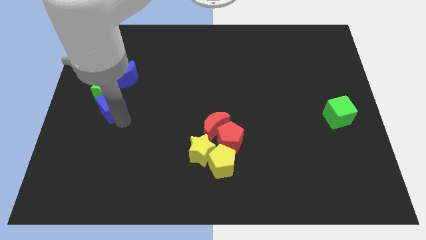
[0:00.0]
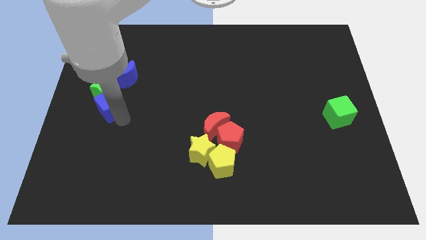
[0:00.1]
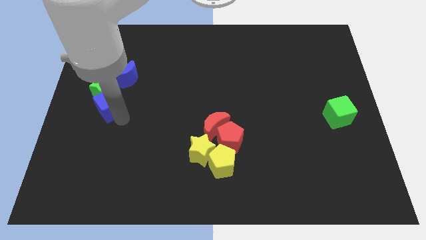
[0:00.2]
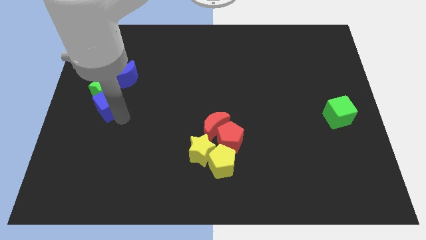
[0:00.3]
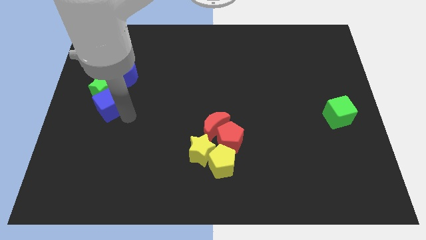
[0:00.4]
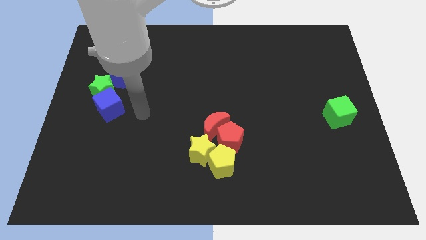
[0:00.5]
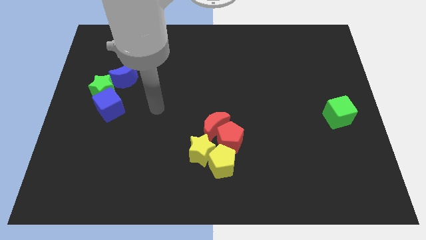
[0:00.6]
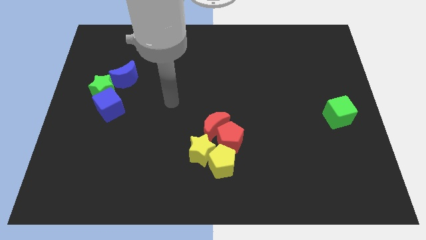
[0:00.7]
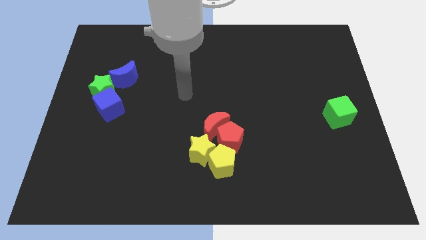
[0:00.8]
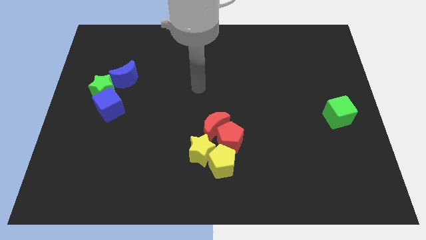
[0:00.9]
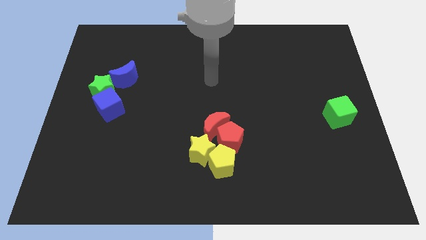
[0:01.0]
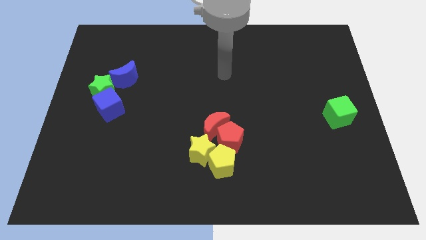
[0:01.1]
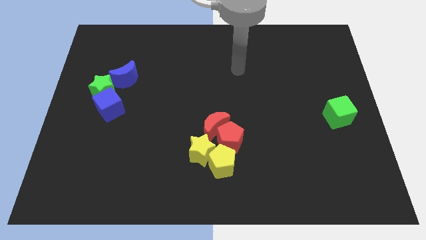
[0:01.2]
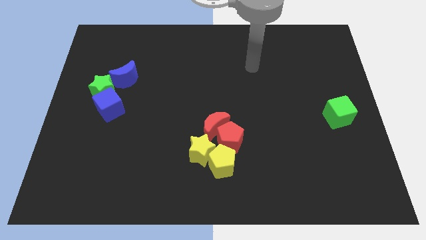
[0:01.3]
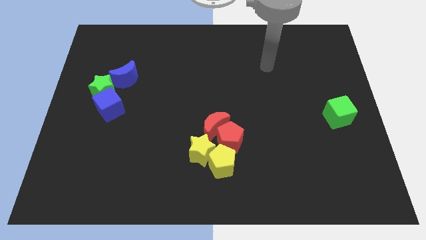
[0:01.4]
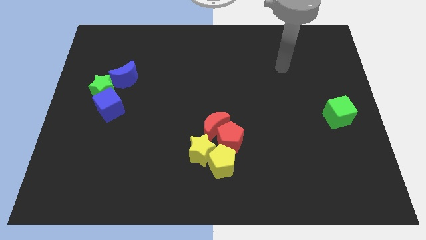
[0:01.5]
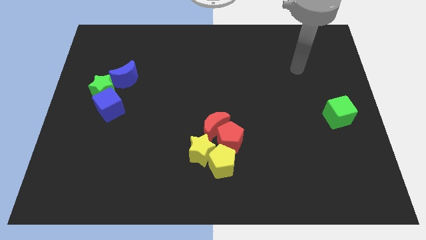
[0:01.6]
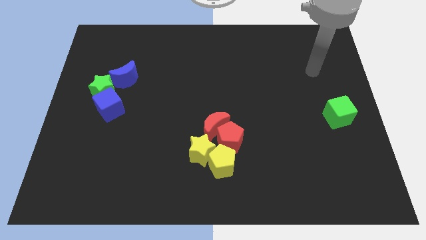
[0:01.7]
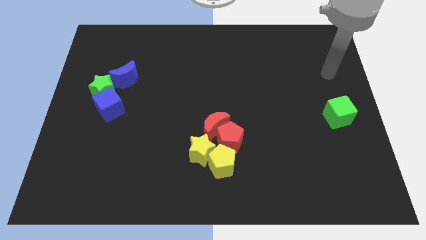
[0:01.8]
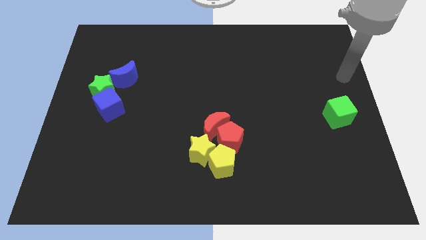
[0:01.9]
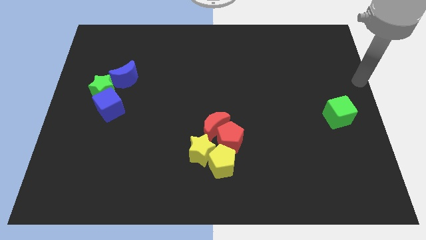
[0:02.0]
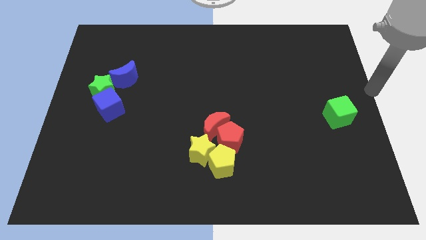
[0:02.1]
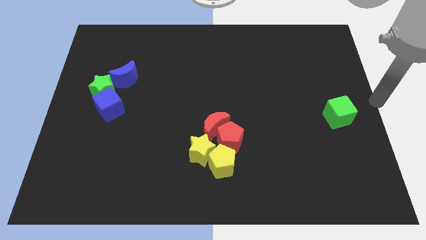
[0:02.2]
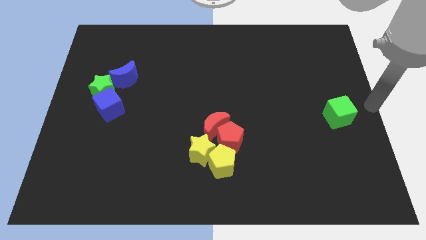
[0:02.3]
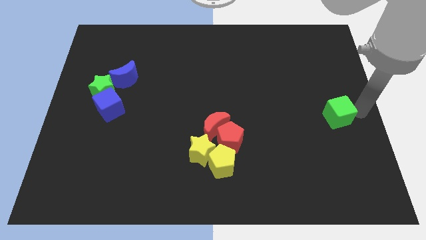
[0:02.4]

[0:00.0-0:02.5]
go away from the blue cube

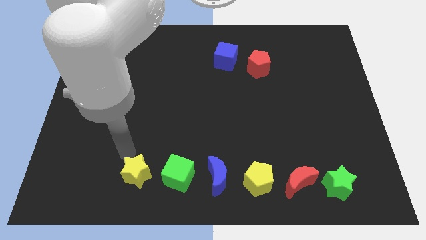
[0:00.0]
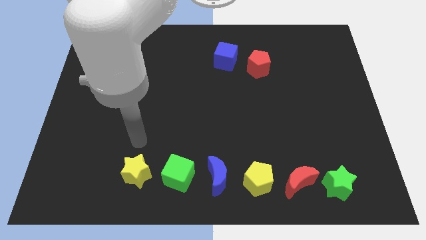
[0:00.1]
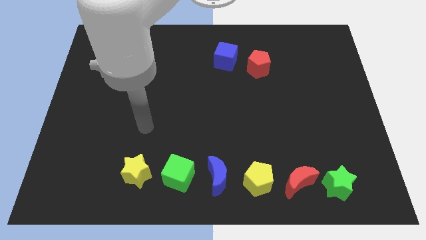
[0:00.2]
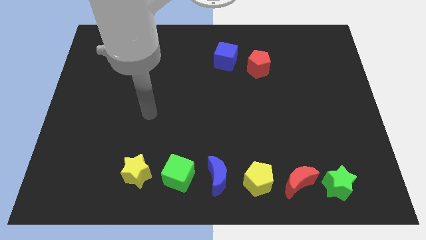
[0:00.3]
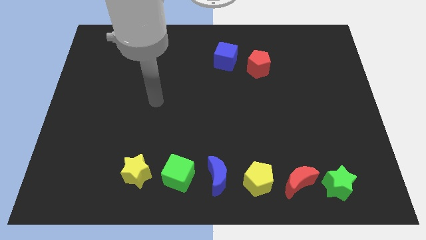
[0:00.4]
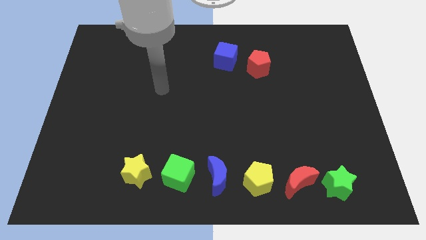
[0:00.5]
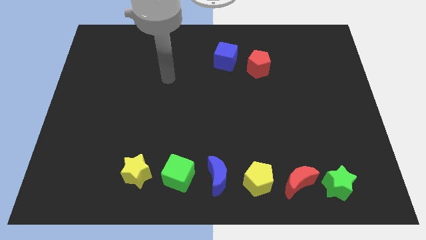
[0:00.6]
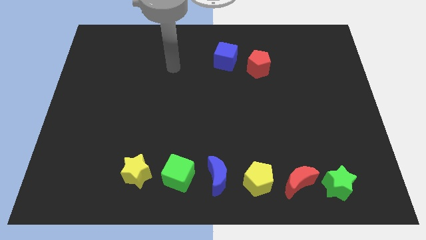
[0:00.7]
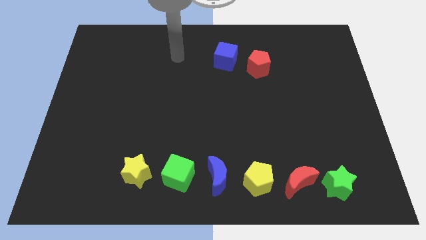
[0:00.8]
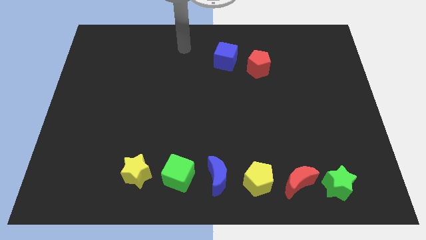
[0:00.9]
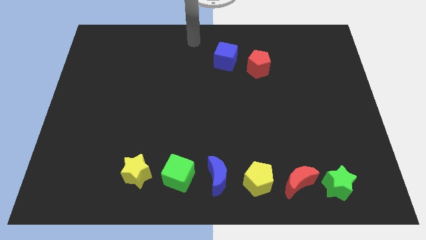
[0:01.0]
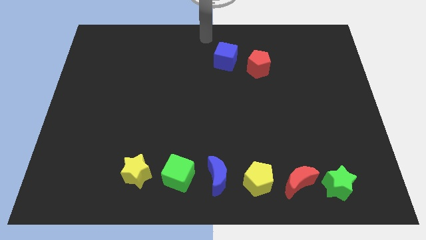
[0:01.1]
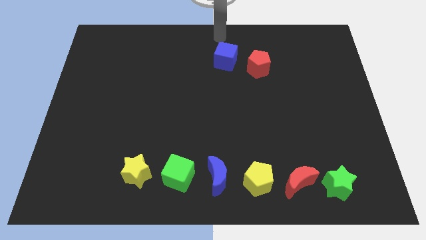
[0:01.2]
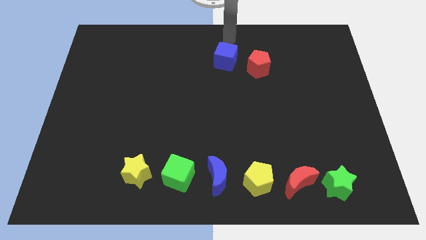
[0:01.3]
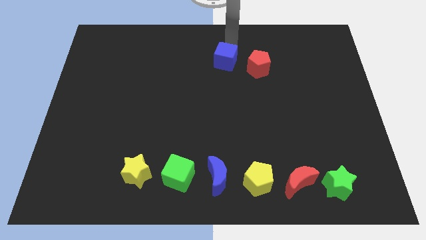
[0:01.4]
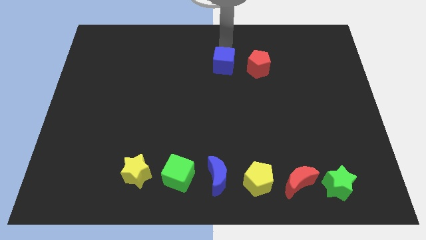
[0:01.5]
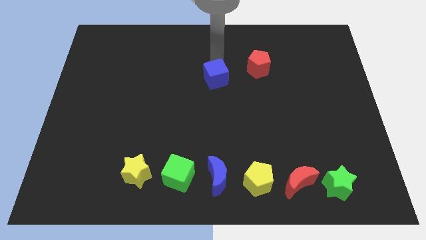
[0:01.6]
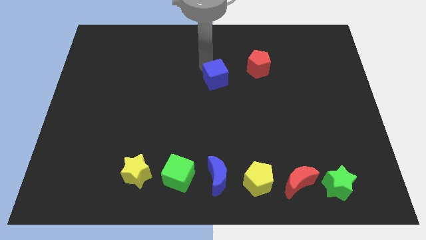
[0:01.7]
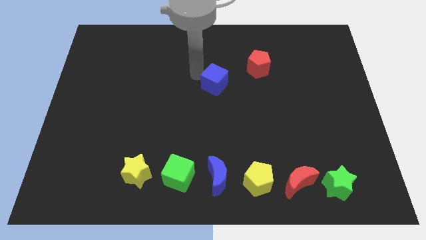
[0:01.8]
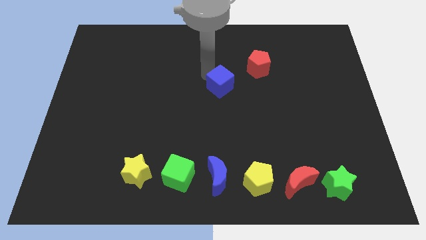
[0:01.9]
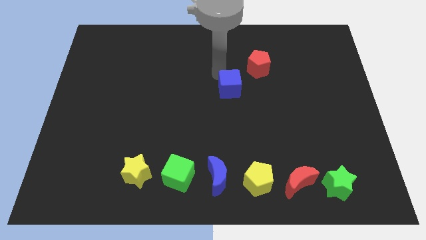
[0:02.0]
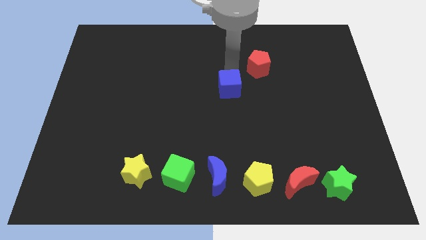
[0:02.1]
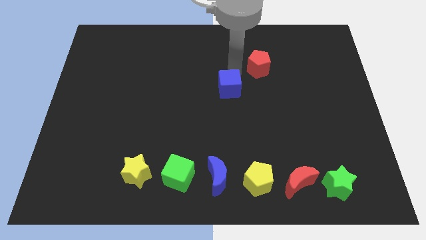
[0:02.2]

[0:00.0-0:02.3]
push blue cube to the center

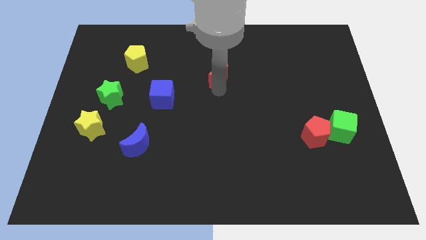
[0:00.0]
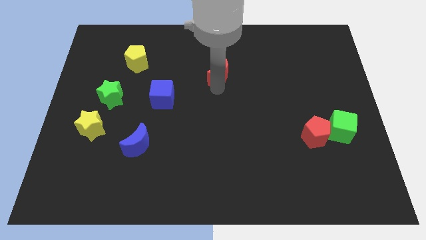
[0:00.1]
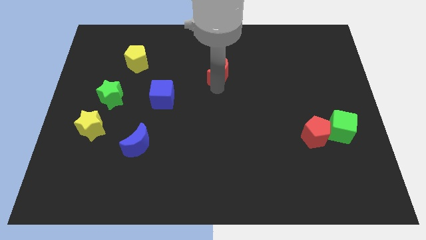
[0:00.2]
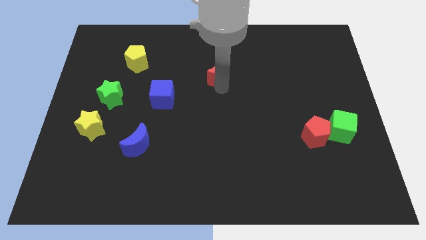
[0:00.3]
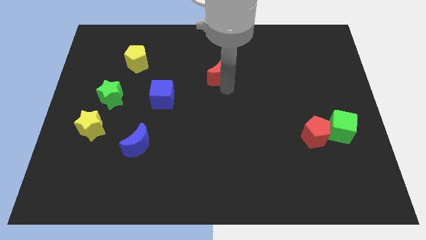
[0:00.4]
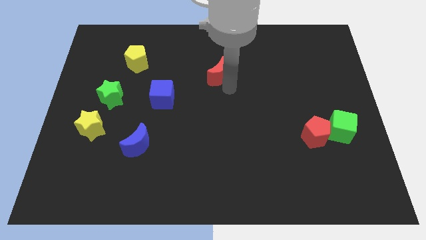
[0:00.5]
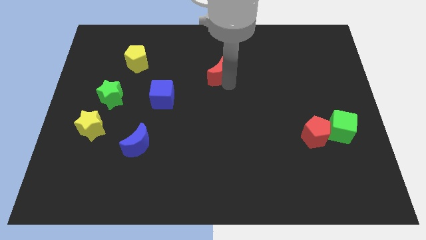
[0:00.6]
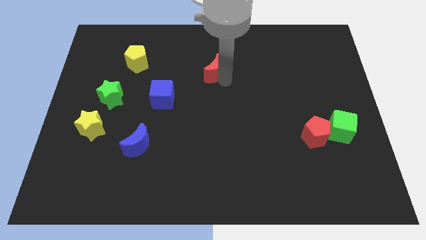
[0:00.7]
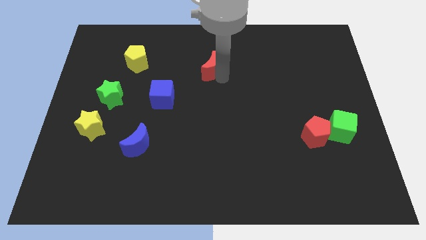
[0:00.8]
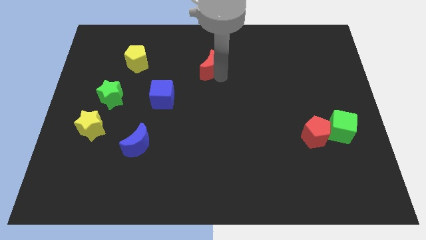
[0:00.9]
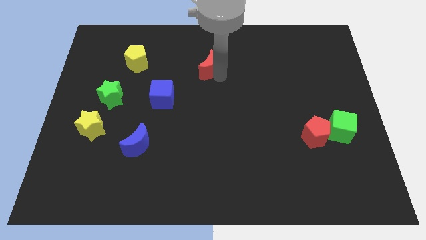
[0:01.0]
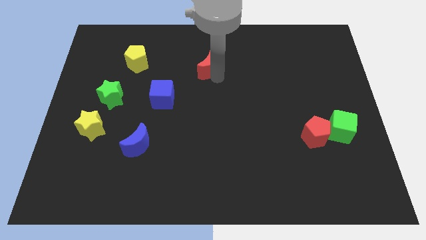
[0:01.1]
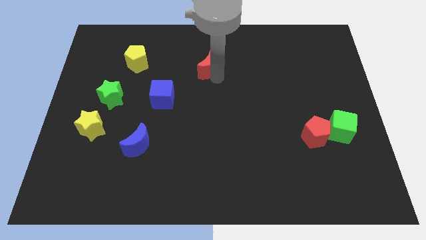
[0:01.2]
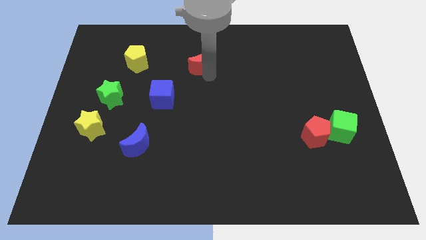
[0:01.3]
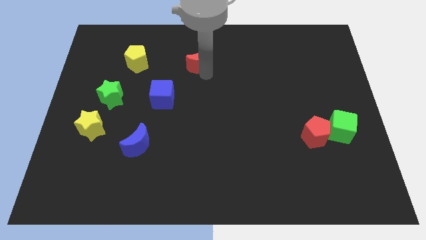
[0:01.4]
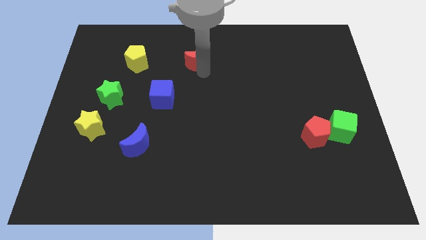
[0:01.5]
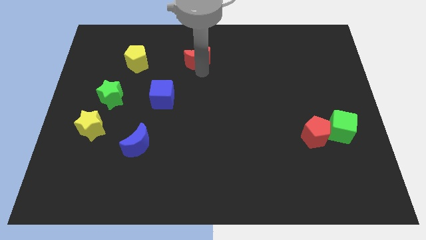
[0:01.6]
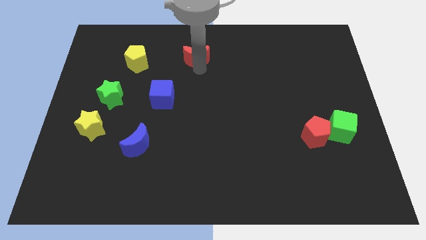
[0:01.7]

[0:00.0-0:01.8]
place the red moon at the right side of the yellow pentagon

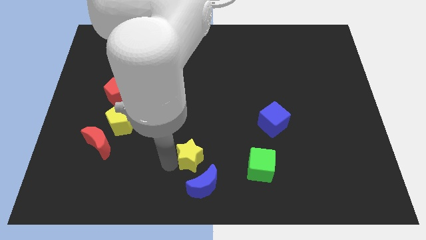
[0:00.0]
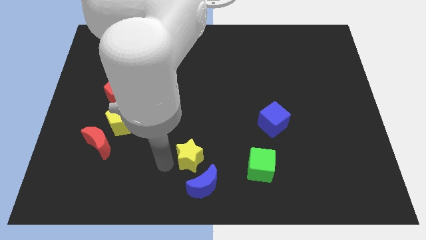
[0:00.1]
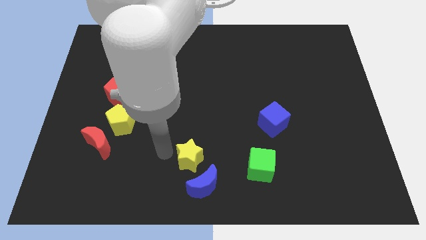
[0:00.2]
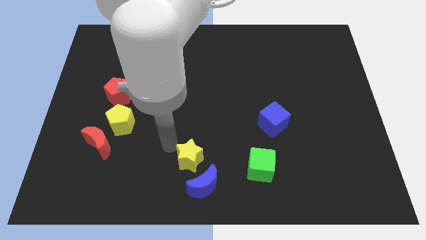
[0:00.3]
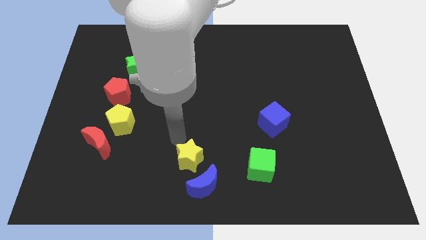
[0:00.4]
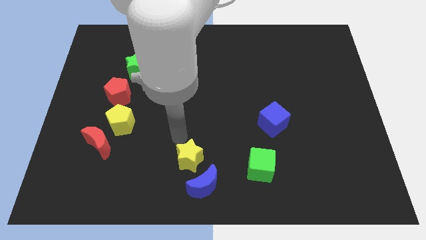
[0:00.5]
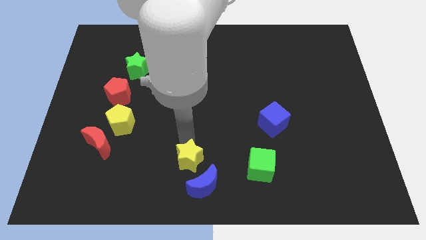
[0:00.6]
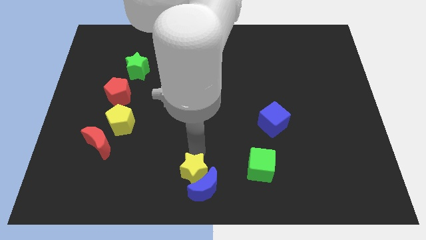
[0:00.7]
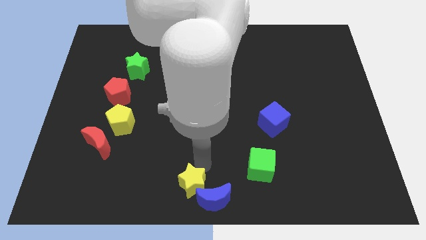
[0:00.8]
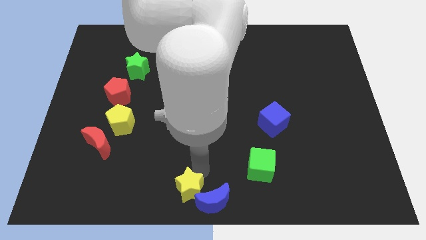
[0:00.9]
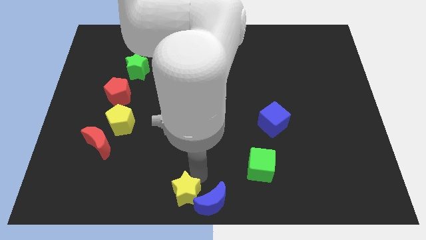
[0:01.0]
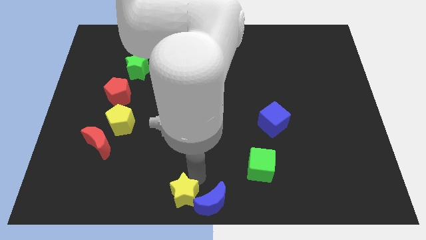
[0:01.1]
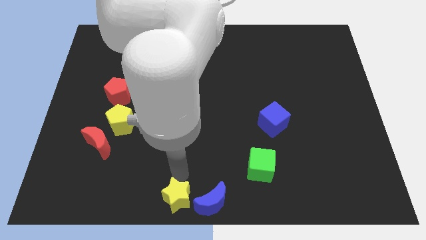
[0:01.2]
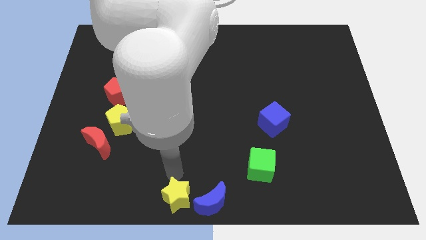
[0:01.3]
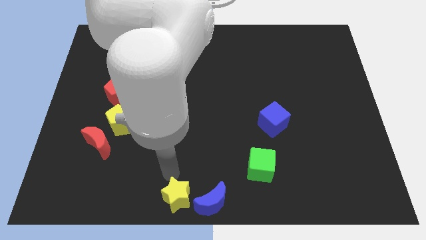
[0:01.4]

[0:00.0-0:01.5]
put the blue moon and the yellow star at the bottom center

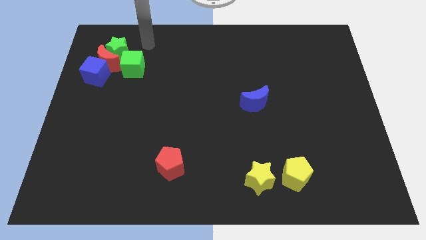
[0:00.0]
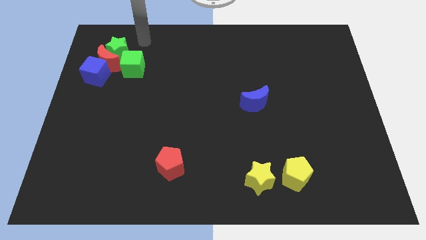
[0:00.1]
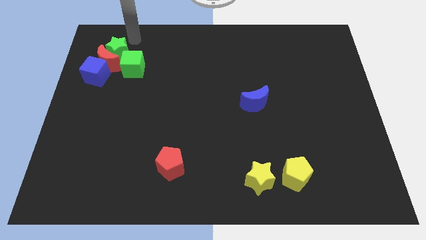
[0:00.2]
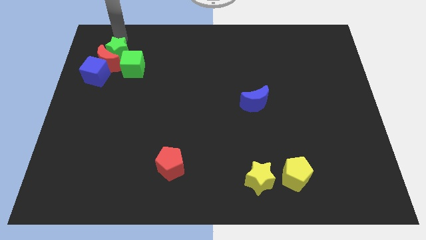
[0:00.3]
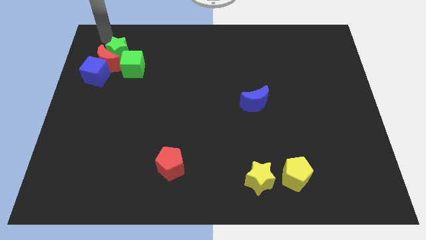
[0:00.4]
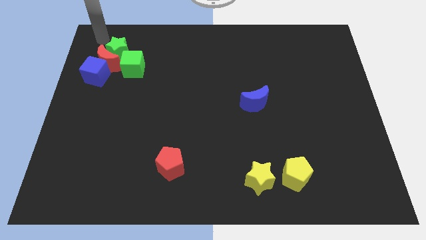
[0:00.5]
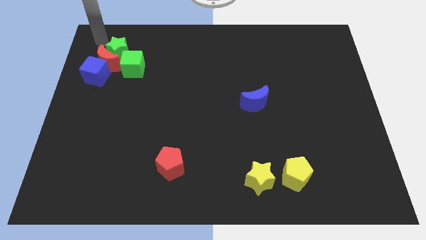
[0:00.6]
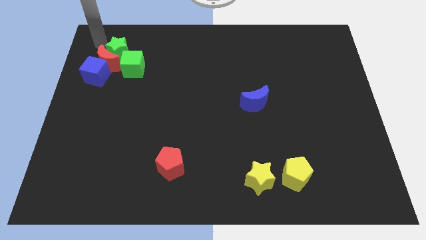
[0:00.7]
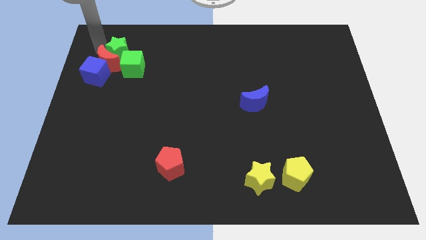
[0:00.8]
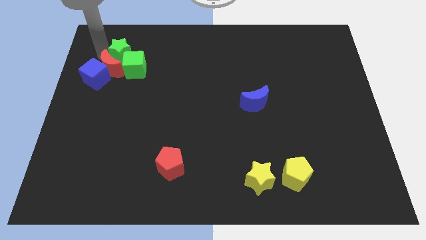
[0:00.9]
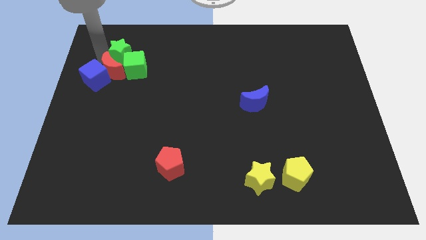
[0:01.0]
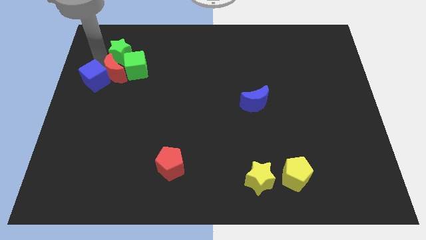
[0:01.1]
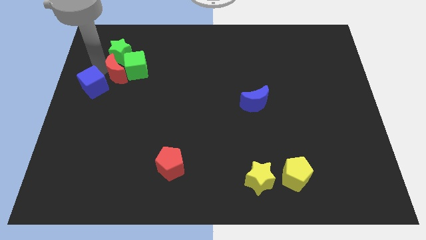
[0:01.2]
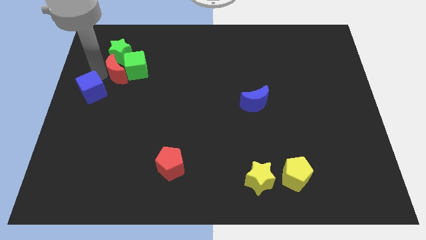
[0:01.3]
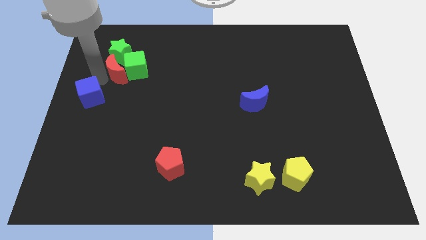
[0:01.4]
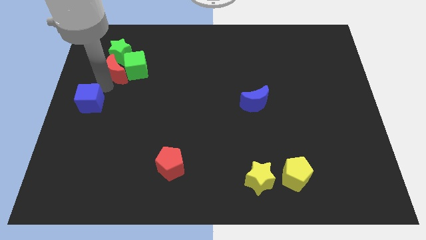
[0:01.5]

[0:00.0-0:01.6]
separate the blue cube and red crescent
